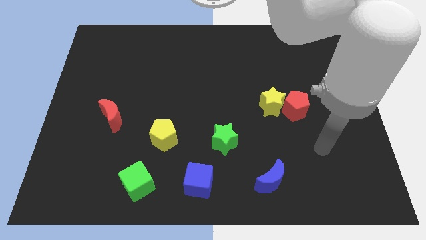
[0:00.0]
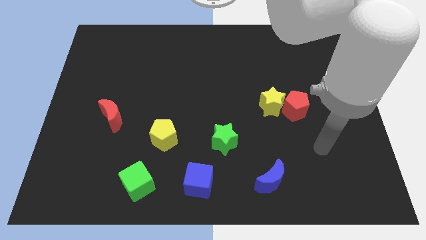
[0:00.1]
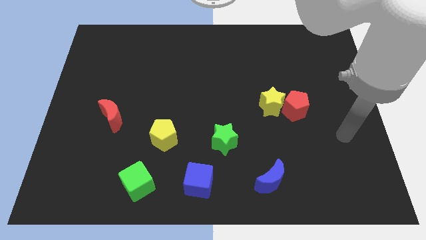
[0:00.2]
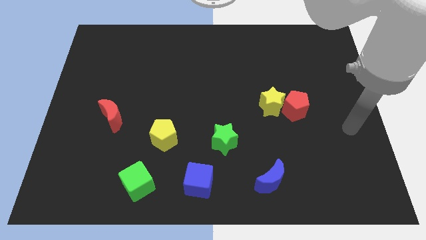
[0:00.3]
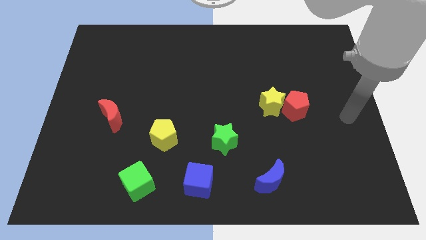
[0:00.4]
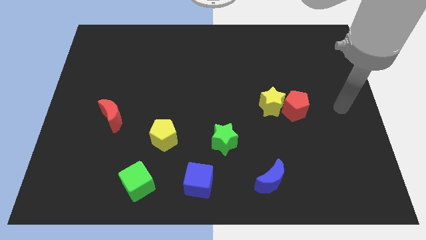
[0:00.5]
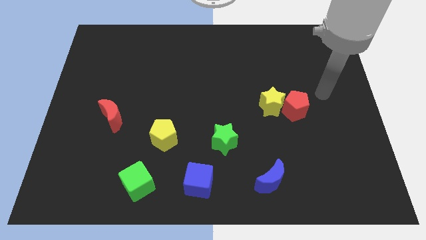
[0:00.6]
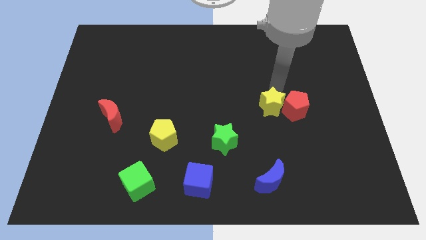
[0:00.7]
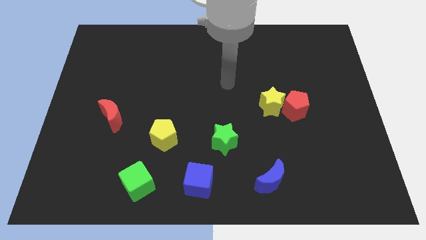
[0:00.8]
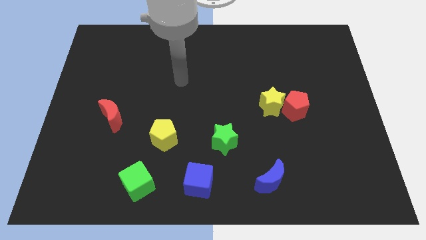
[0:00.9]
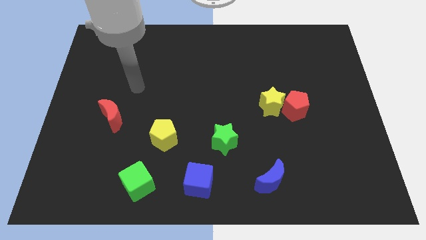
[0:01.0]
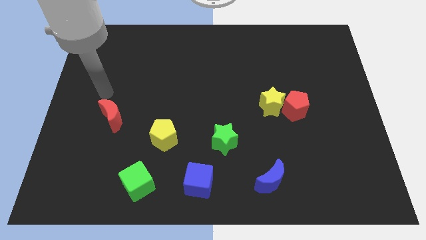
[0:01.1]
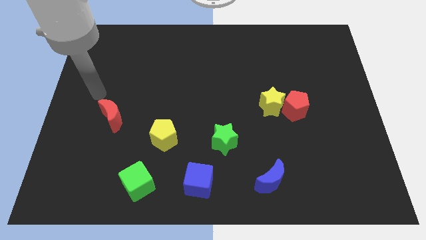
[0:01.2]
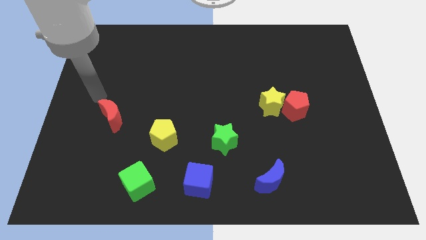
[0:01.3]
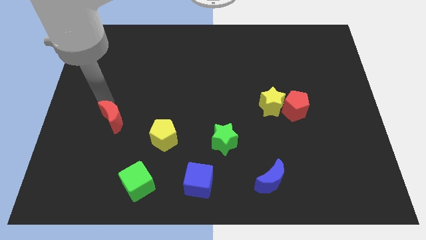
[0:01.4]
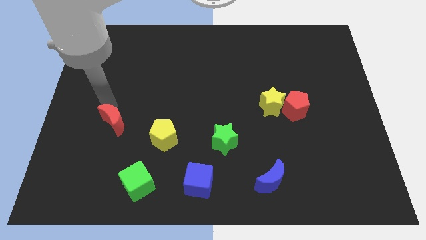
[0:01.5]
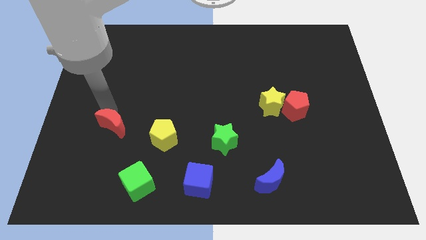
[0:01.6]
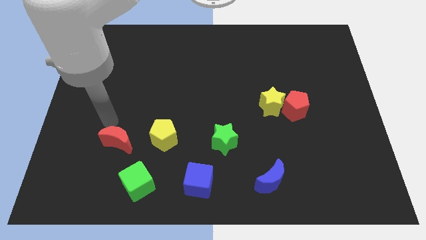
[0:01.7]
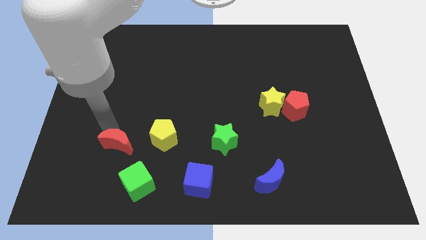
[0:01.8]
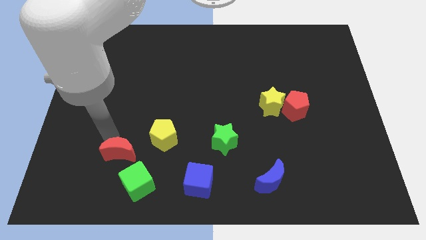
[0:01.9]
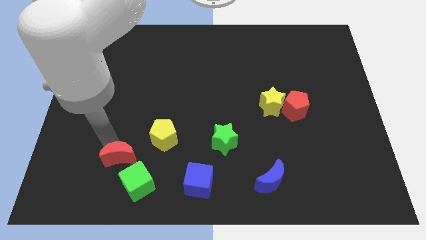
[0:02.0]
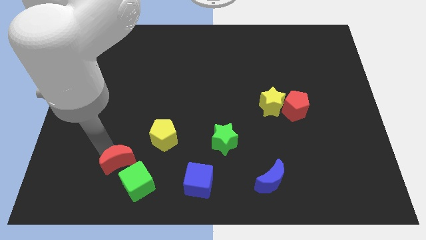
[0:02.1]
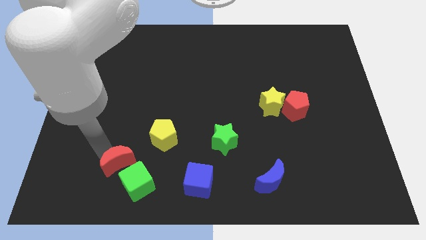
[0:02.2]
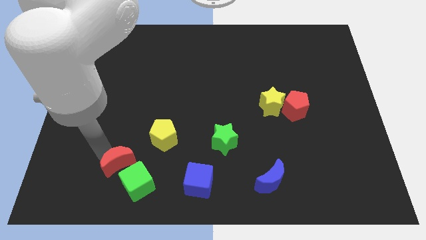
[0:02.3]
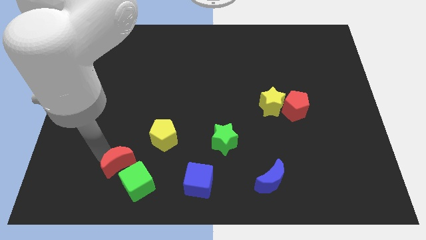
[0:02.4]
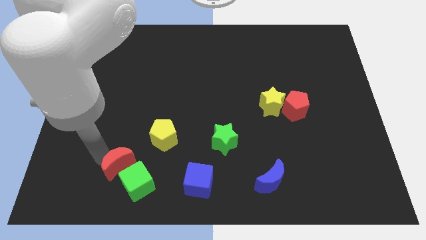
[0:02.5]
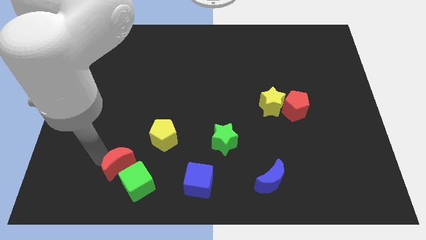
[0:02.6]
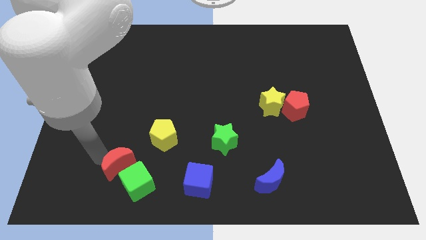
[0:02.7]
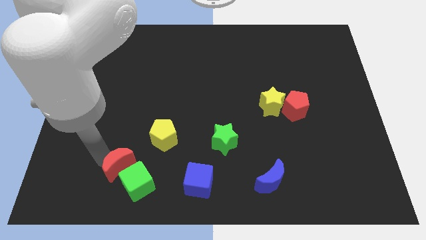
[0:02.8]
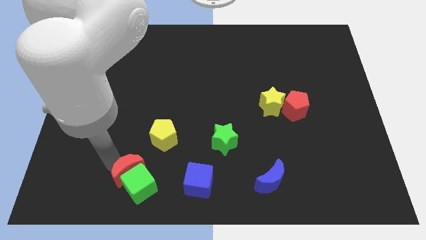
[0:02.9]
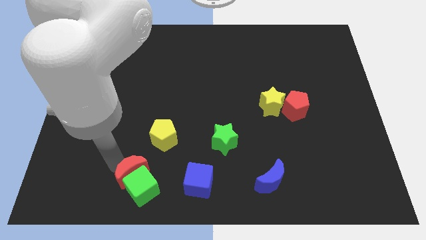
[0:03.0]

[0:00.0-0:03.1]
push the red moon close to the green cube

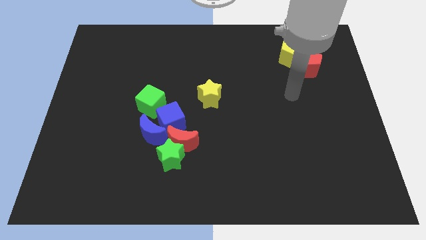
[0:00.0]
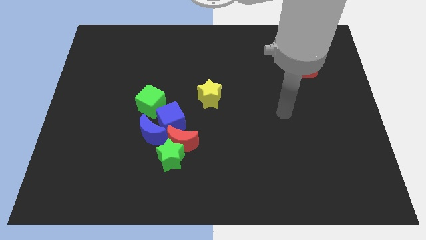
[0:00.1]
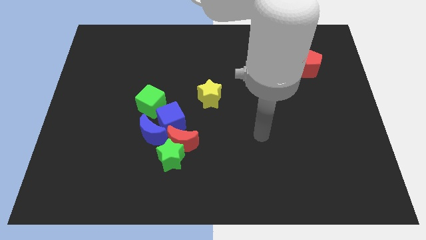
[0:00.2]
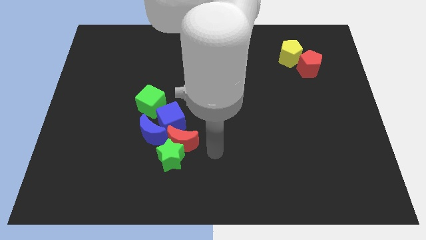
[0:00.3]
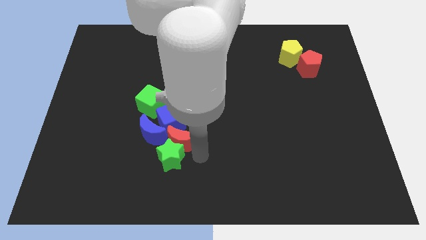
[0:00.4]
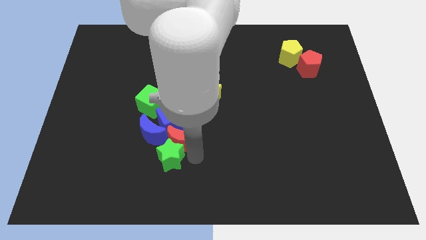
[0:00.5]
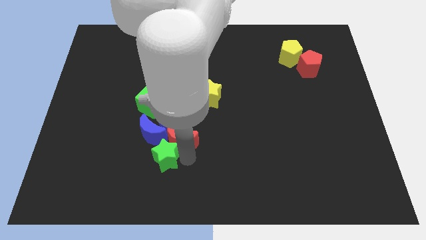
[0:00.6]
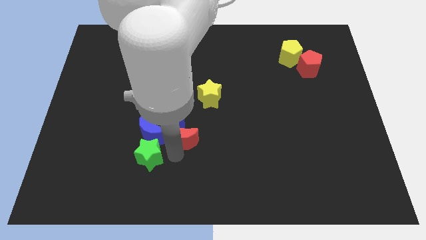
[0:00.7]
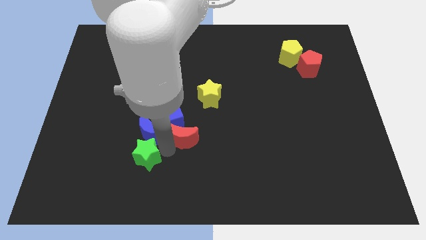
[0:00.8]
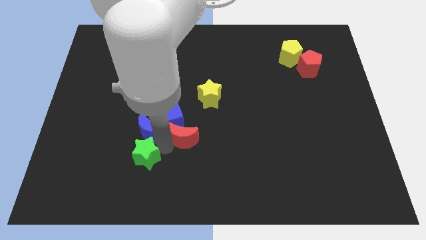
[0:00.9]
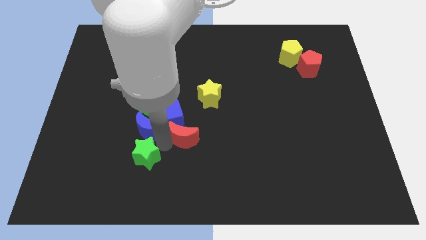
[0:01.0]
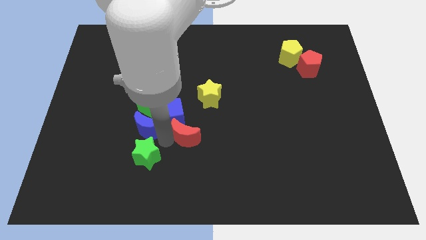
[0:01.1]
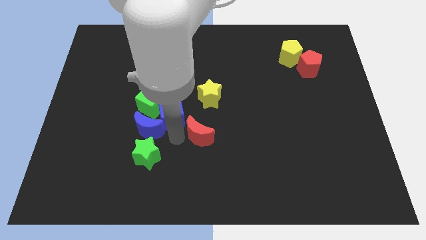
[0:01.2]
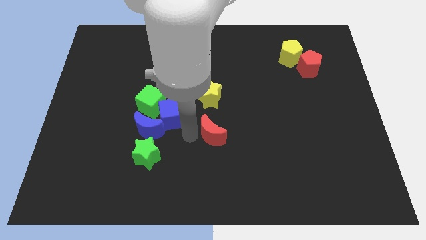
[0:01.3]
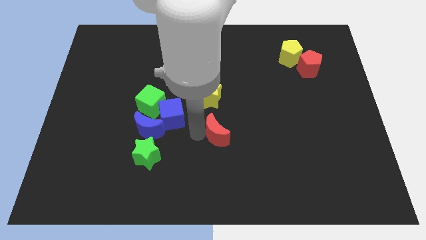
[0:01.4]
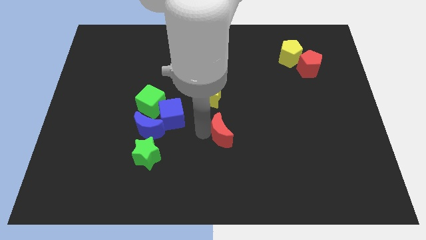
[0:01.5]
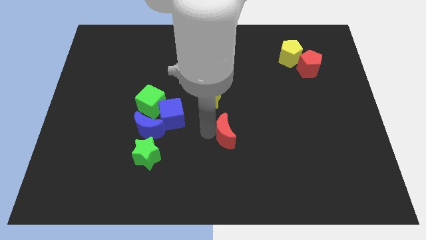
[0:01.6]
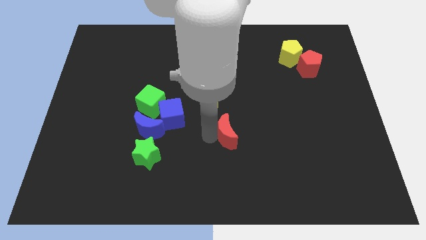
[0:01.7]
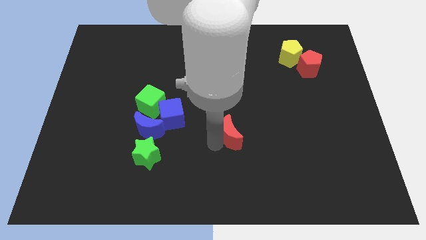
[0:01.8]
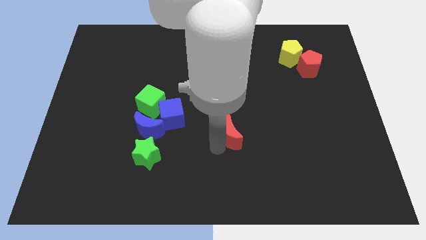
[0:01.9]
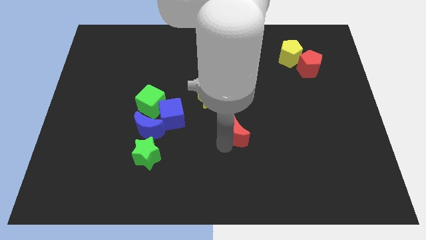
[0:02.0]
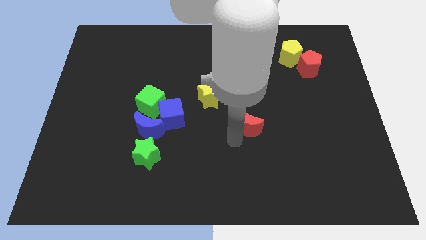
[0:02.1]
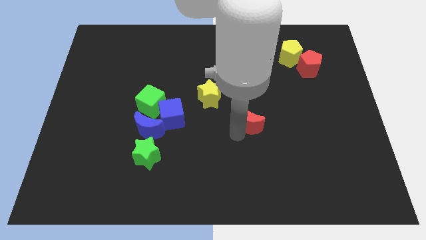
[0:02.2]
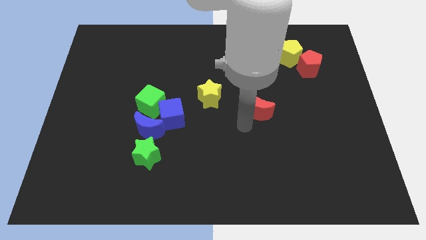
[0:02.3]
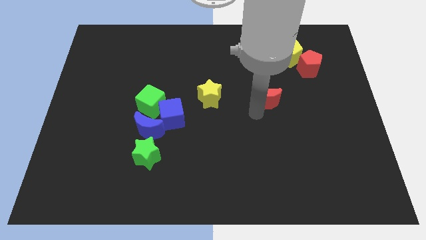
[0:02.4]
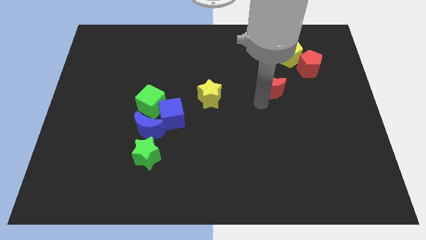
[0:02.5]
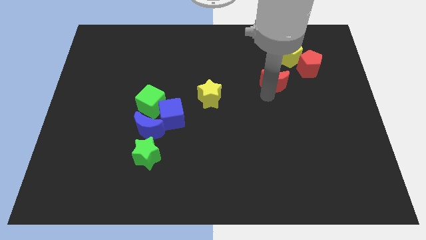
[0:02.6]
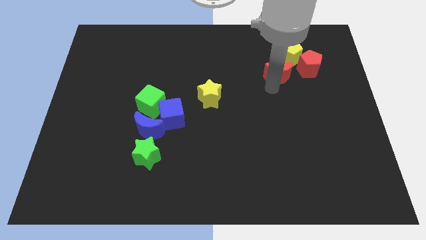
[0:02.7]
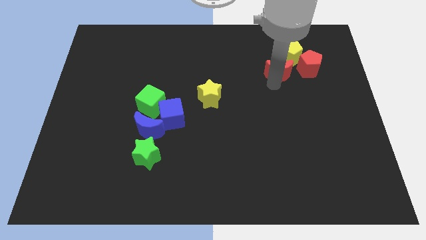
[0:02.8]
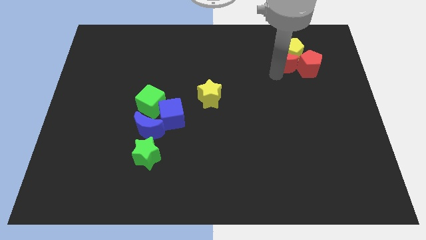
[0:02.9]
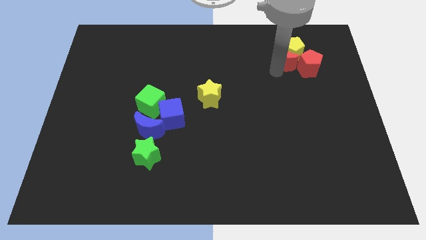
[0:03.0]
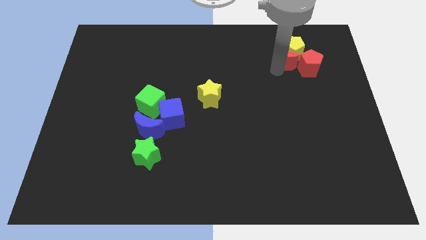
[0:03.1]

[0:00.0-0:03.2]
slide the red moon towards the yellow pentagon

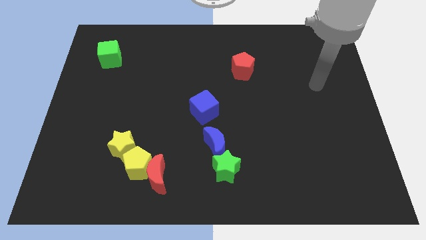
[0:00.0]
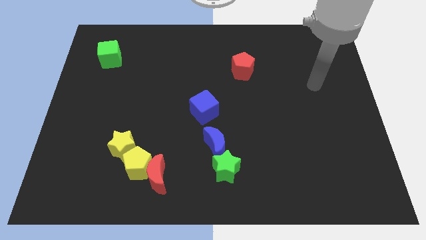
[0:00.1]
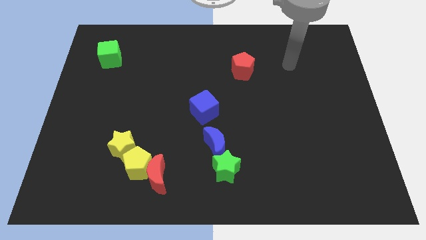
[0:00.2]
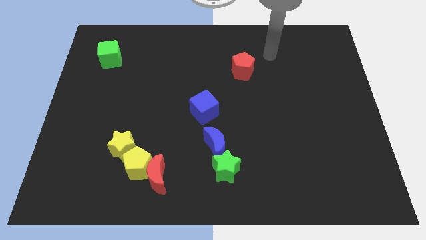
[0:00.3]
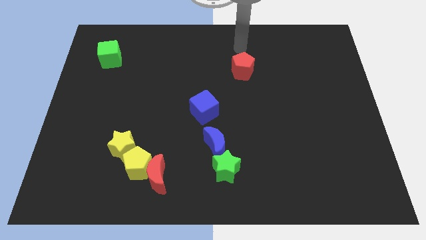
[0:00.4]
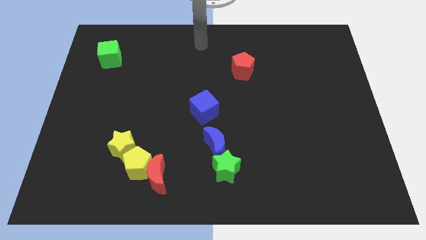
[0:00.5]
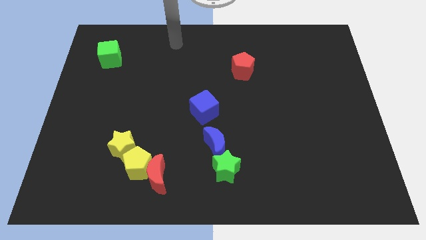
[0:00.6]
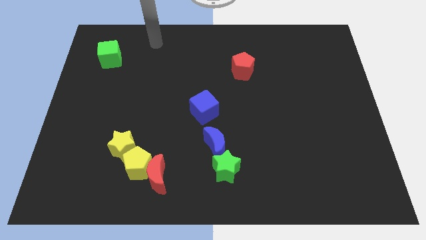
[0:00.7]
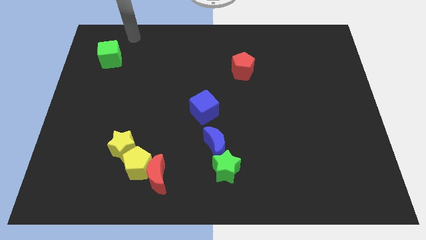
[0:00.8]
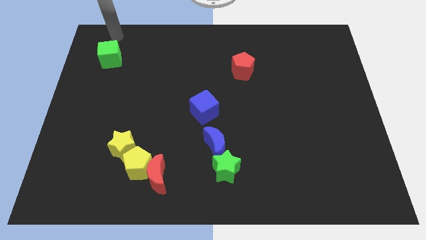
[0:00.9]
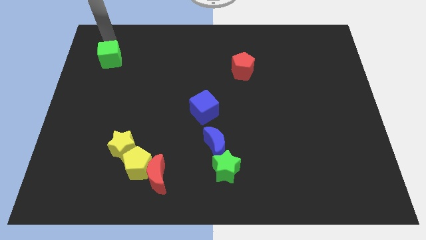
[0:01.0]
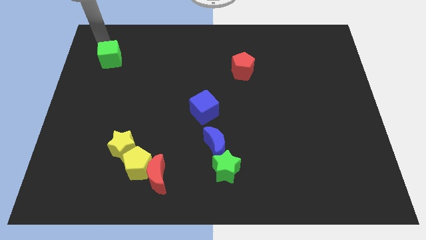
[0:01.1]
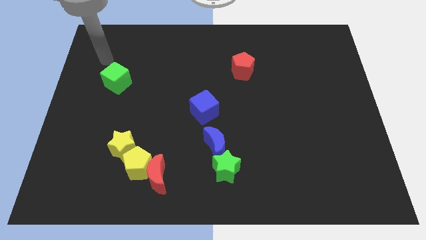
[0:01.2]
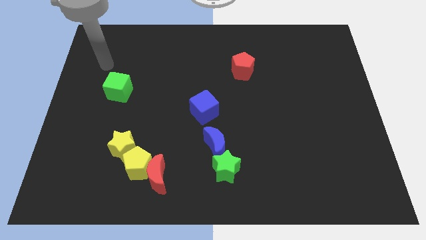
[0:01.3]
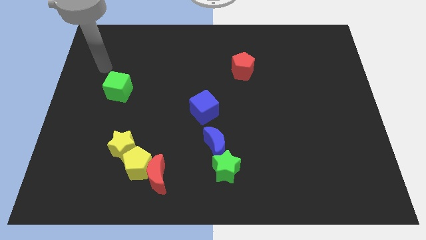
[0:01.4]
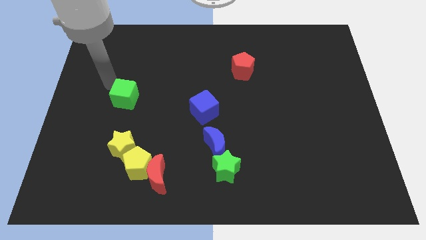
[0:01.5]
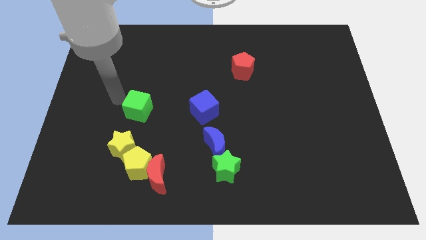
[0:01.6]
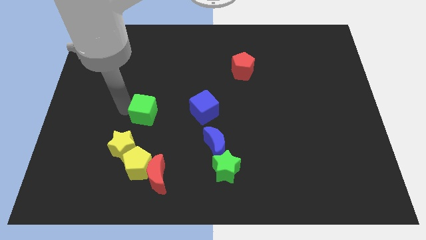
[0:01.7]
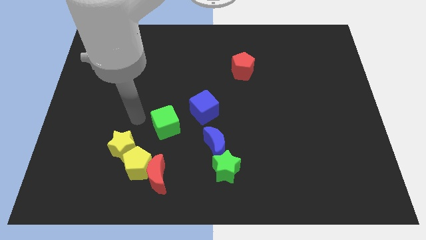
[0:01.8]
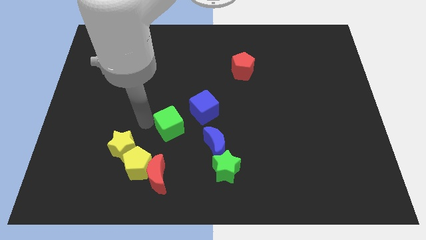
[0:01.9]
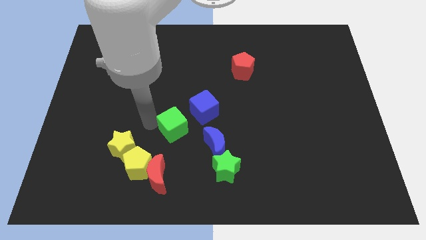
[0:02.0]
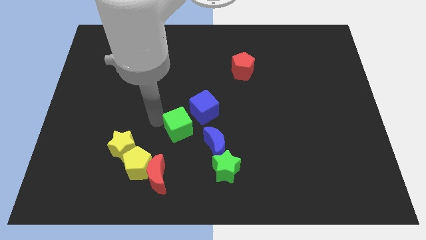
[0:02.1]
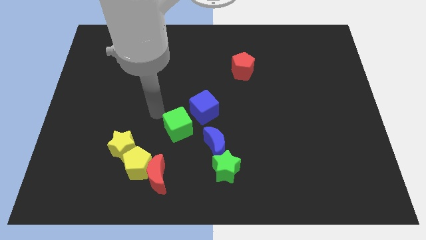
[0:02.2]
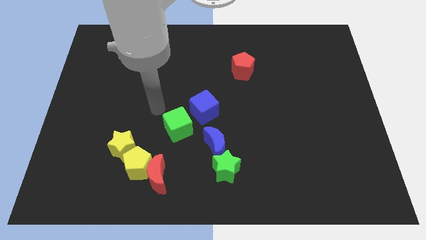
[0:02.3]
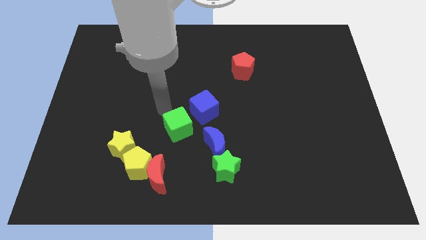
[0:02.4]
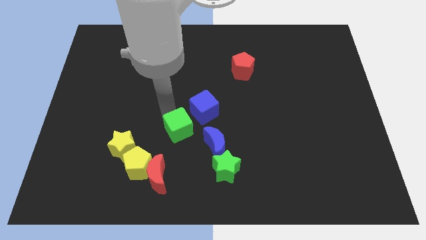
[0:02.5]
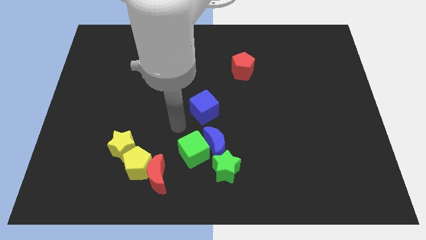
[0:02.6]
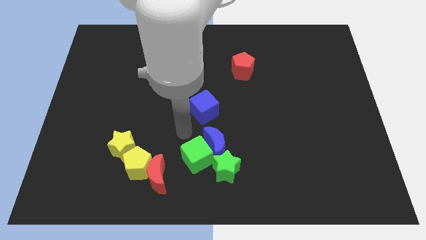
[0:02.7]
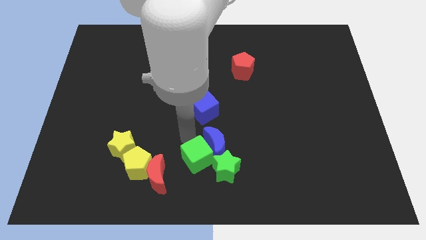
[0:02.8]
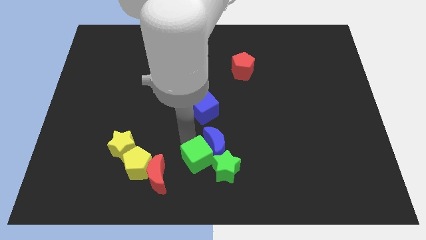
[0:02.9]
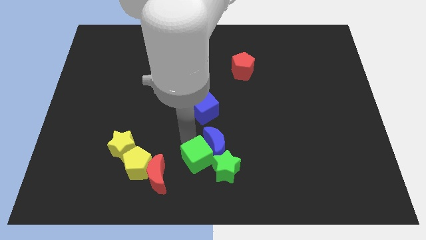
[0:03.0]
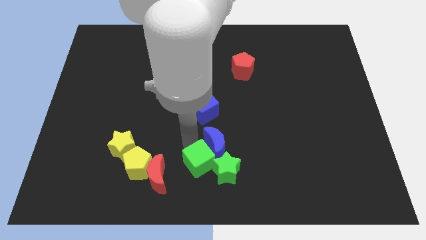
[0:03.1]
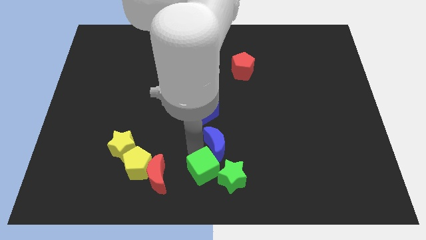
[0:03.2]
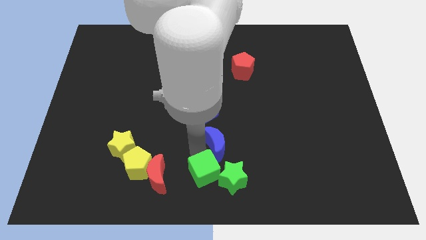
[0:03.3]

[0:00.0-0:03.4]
put the green cube close to the green star
